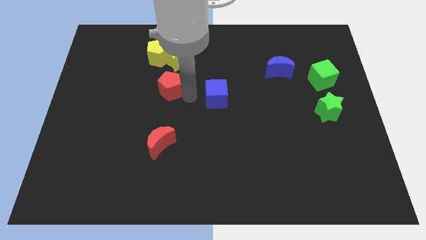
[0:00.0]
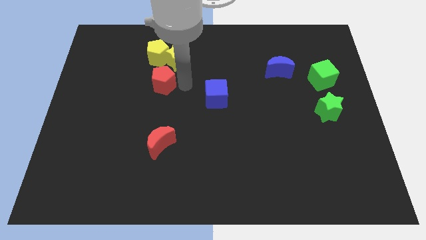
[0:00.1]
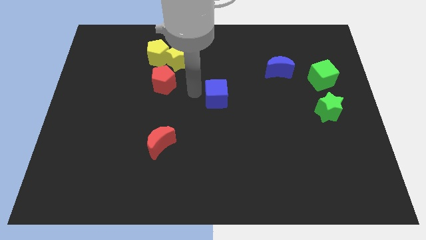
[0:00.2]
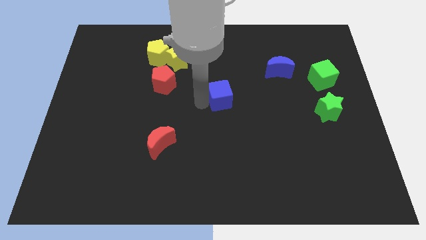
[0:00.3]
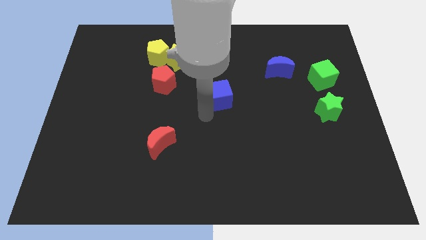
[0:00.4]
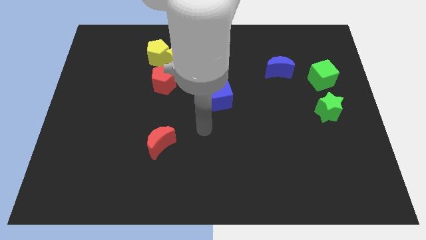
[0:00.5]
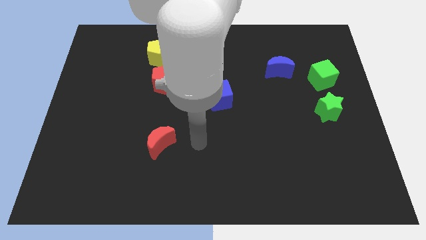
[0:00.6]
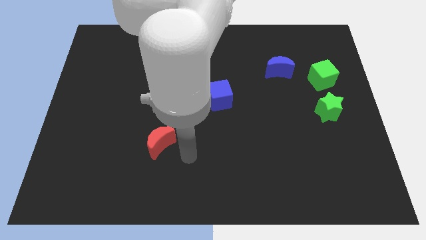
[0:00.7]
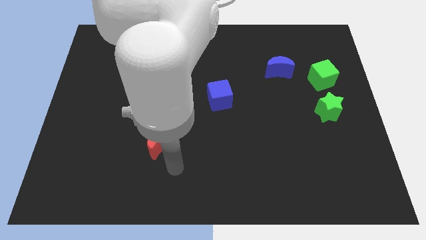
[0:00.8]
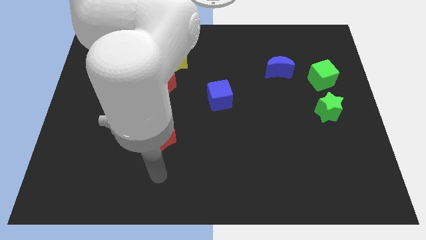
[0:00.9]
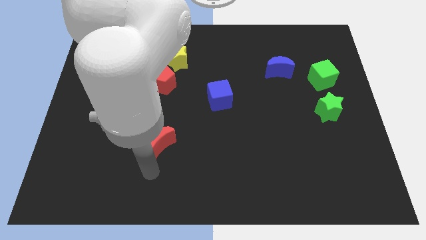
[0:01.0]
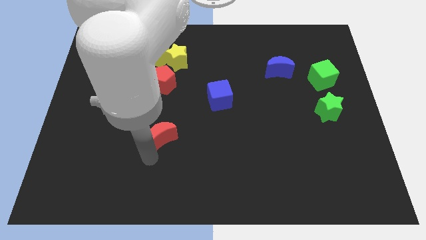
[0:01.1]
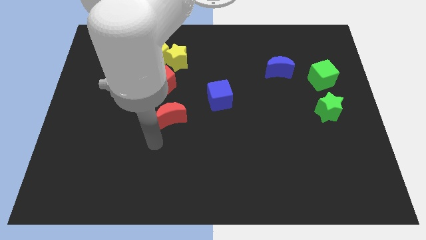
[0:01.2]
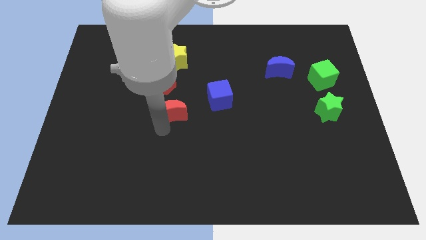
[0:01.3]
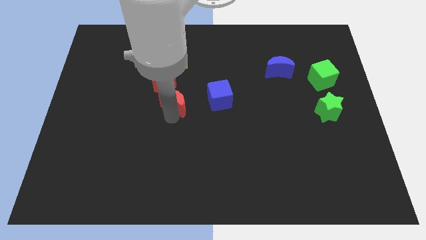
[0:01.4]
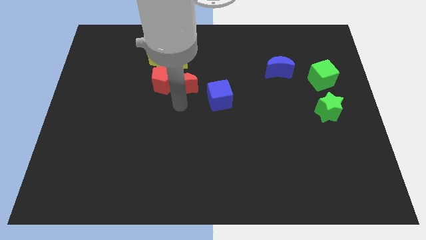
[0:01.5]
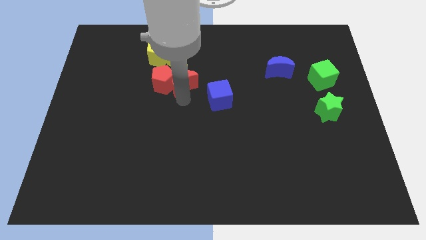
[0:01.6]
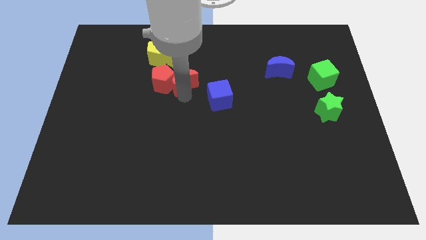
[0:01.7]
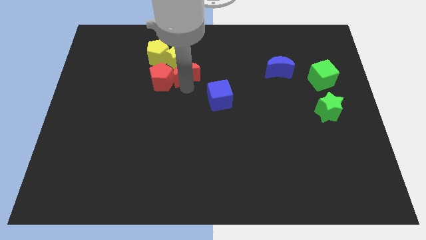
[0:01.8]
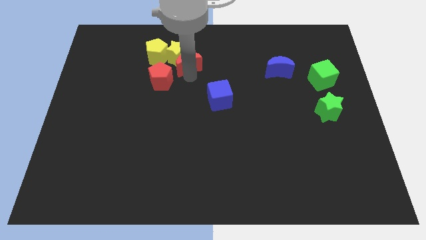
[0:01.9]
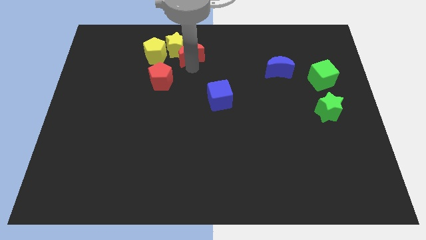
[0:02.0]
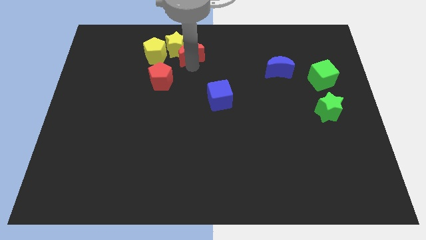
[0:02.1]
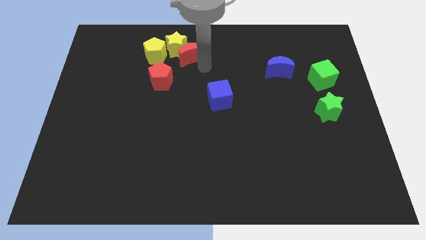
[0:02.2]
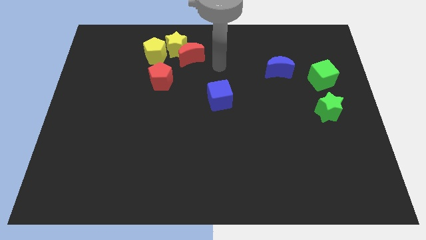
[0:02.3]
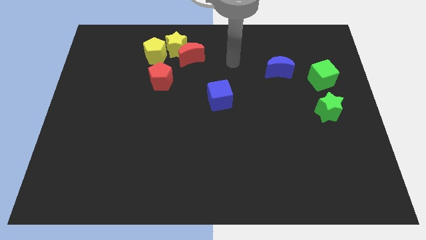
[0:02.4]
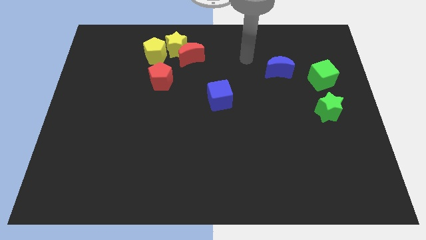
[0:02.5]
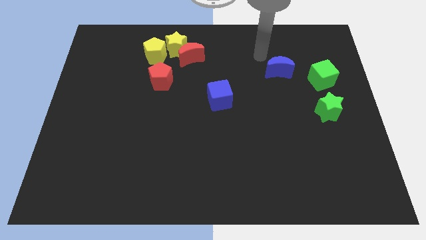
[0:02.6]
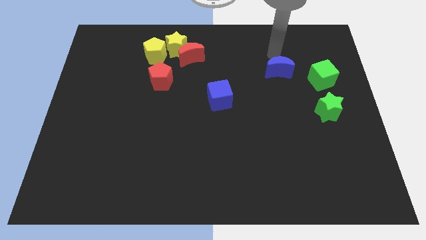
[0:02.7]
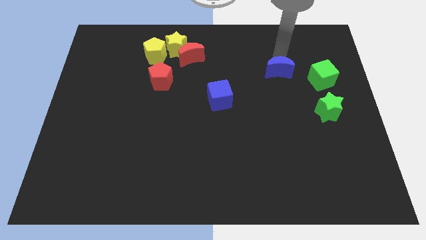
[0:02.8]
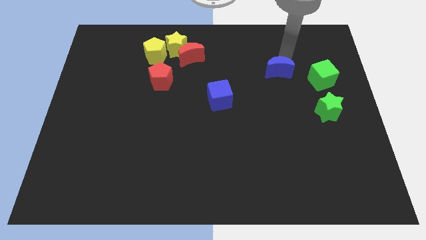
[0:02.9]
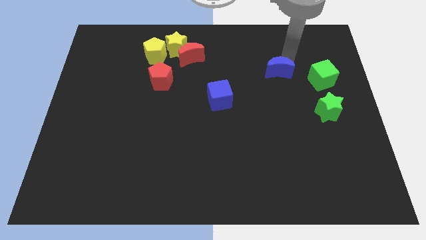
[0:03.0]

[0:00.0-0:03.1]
push the red crescent to the bottom of the yellow star

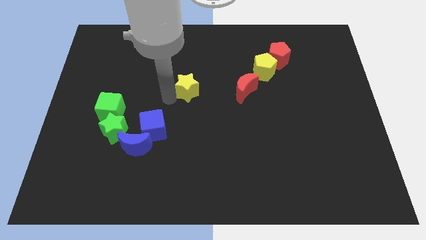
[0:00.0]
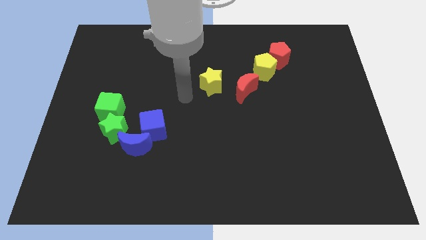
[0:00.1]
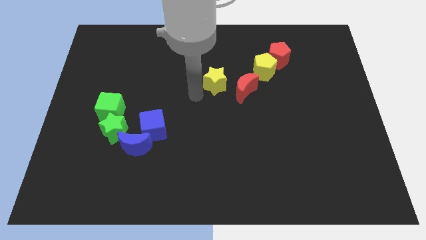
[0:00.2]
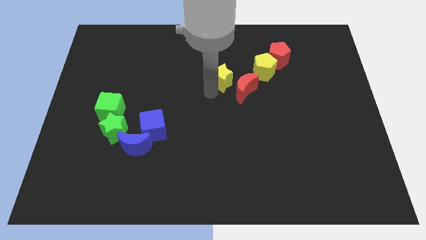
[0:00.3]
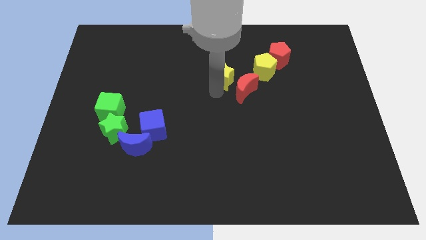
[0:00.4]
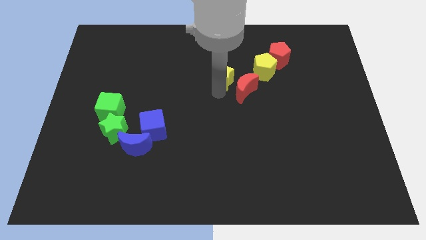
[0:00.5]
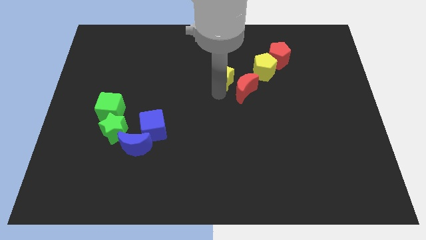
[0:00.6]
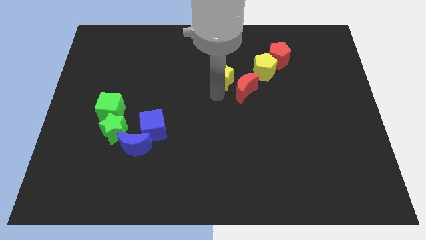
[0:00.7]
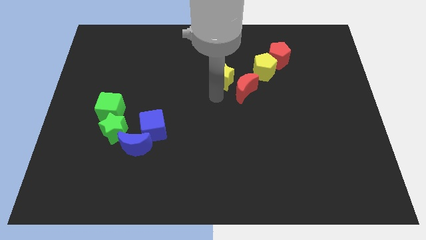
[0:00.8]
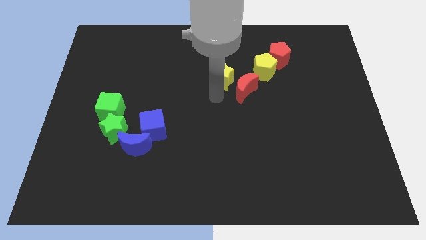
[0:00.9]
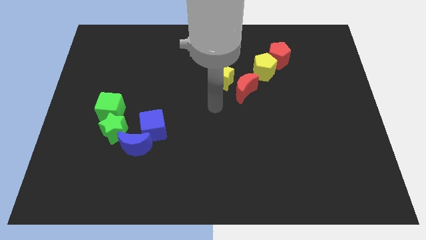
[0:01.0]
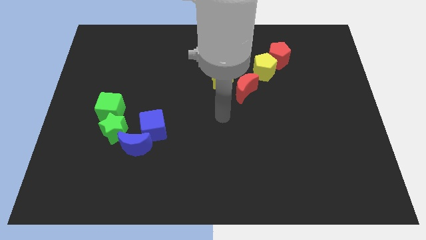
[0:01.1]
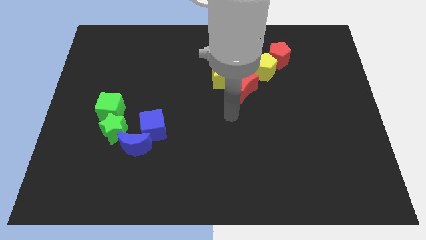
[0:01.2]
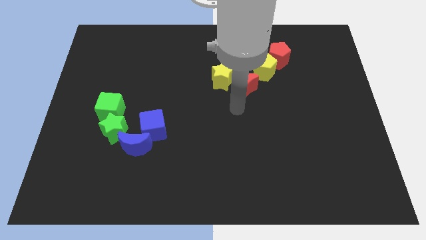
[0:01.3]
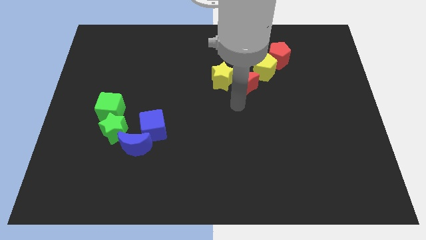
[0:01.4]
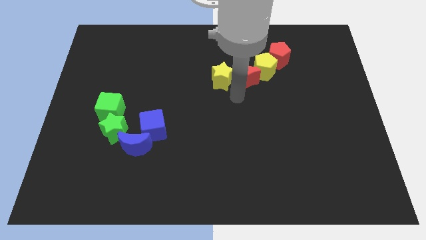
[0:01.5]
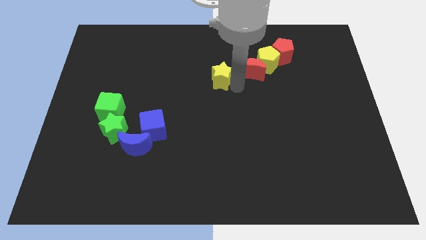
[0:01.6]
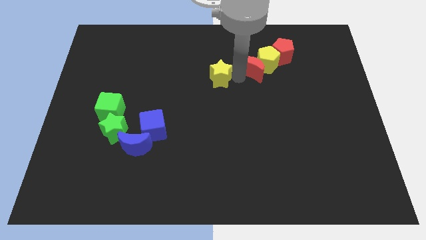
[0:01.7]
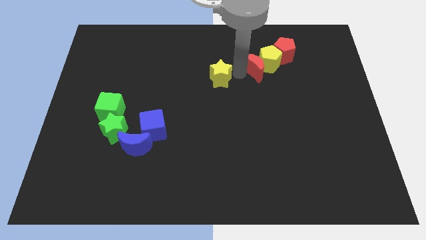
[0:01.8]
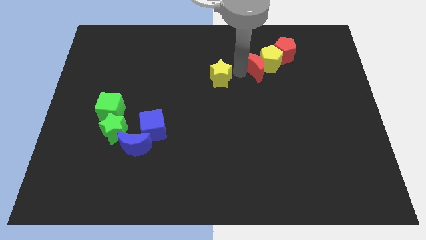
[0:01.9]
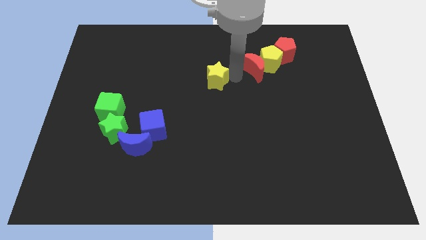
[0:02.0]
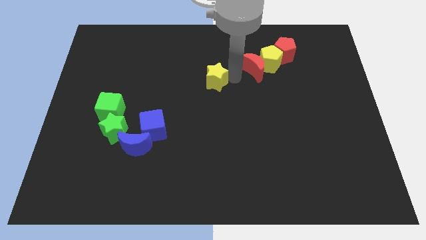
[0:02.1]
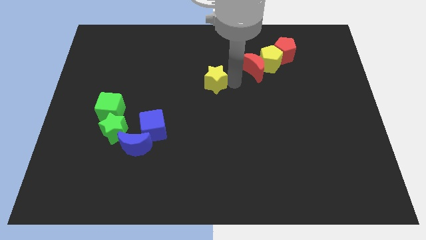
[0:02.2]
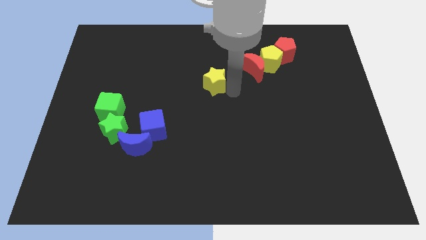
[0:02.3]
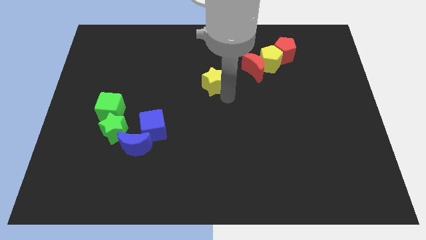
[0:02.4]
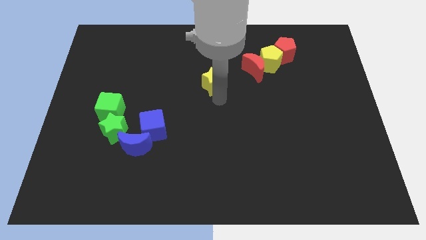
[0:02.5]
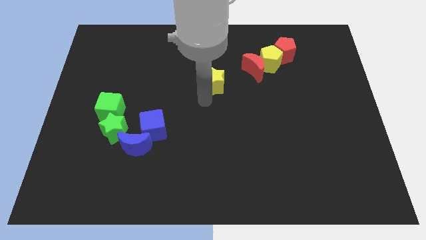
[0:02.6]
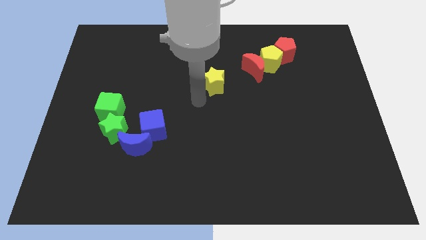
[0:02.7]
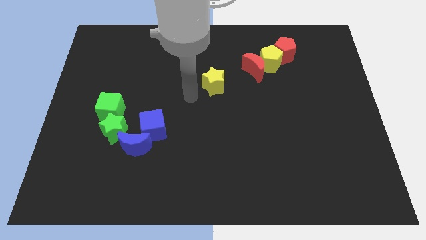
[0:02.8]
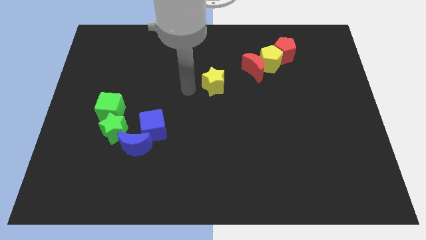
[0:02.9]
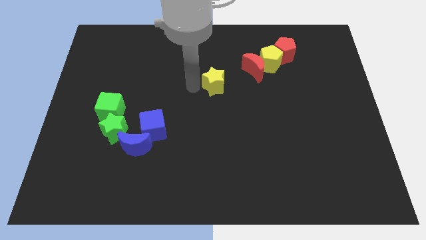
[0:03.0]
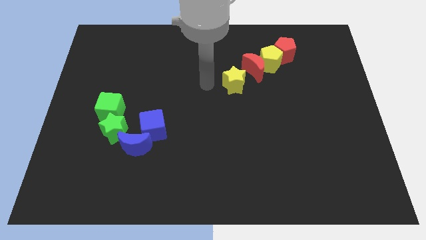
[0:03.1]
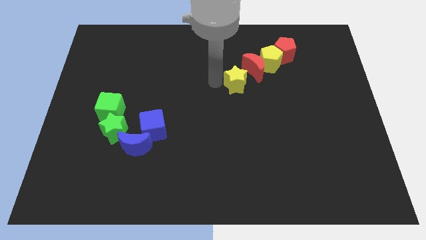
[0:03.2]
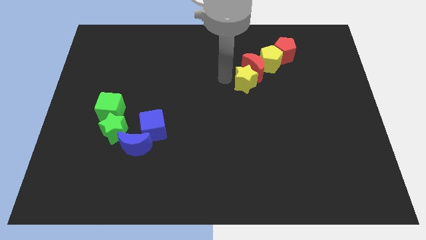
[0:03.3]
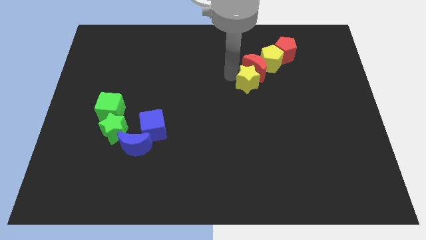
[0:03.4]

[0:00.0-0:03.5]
make a diagonal line out of red and the yellow blocks

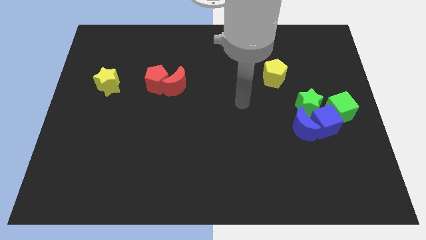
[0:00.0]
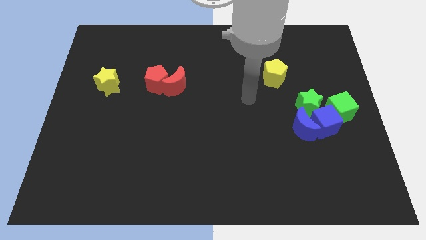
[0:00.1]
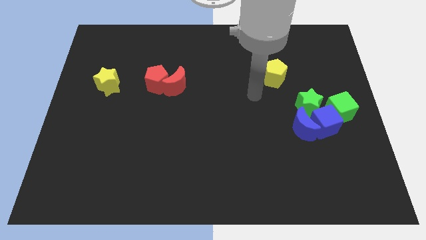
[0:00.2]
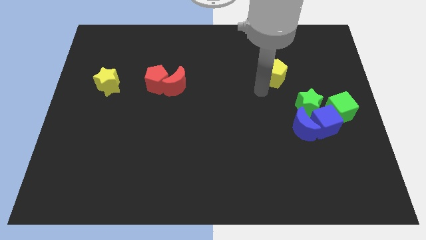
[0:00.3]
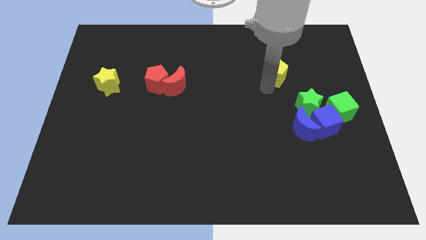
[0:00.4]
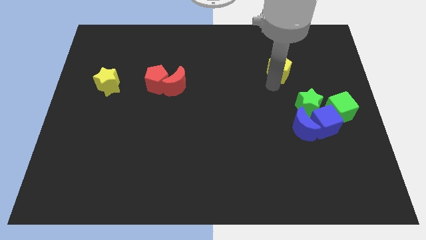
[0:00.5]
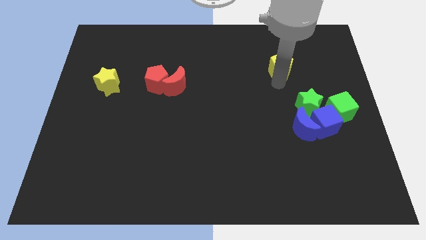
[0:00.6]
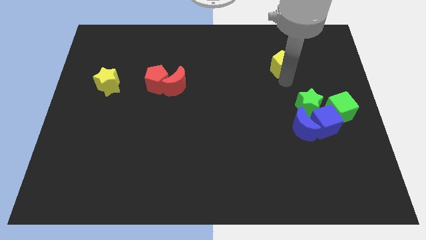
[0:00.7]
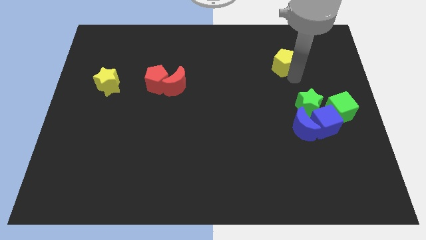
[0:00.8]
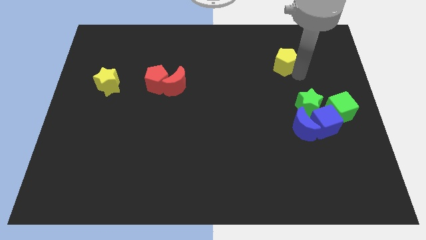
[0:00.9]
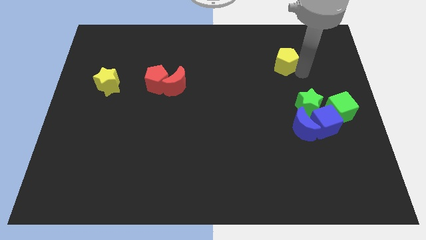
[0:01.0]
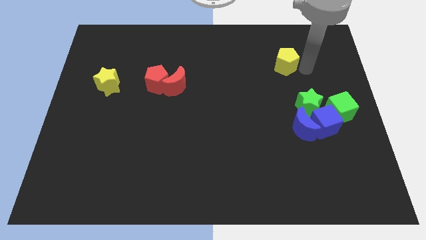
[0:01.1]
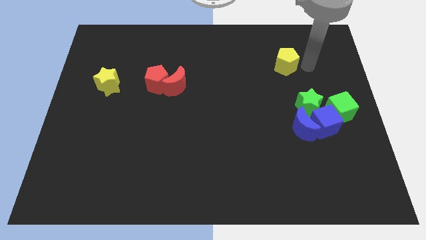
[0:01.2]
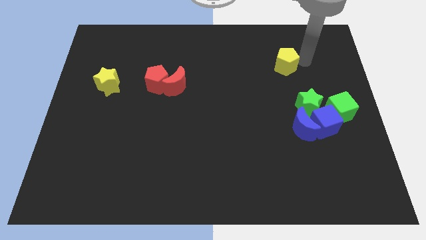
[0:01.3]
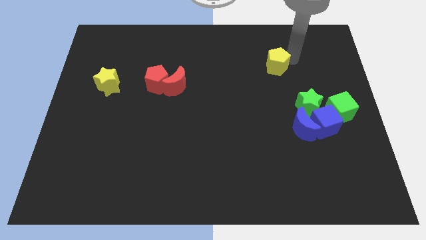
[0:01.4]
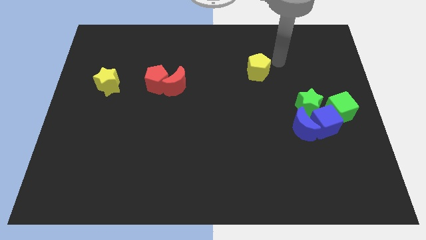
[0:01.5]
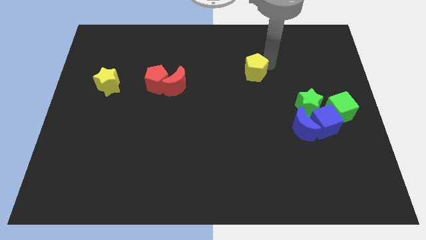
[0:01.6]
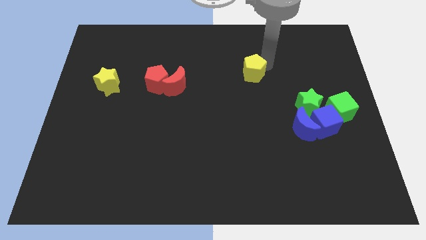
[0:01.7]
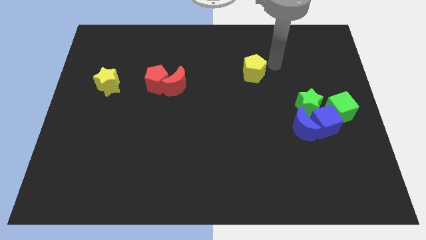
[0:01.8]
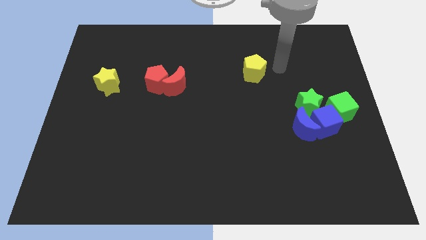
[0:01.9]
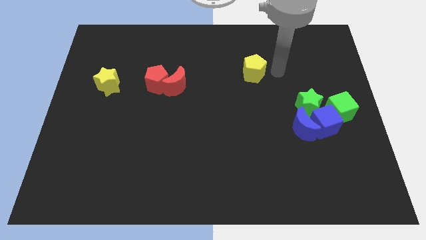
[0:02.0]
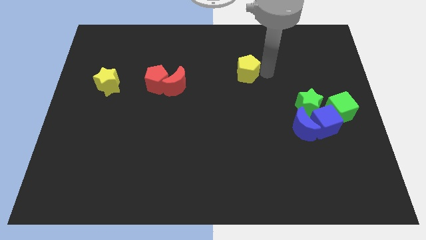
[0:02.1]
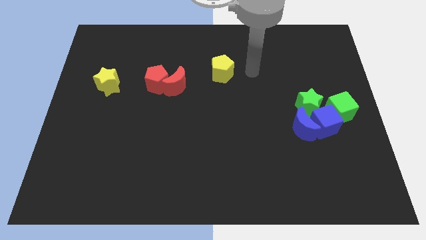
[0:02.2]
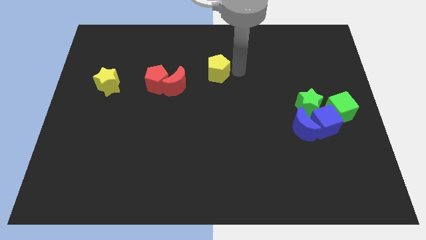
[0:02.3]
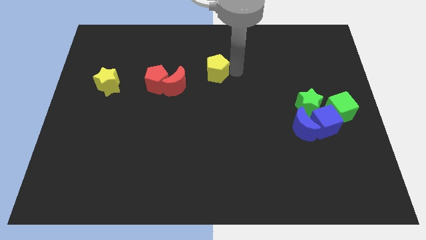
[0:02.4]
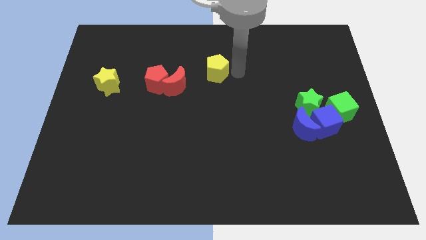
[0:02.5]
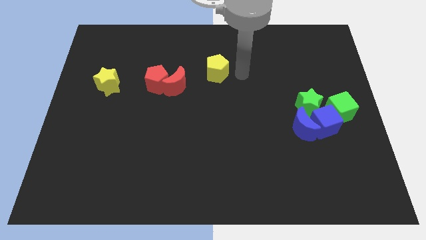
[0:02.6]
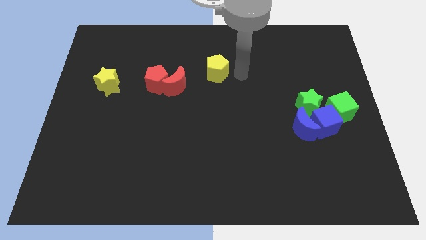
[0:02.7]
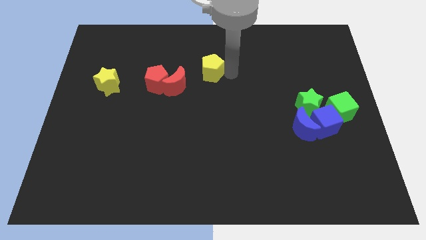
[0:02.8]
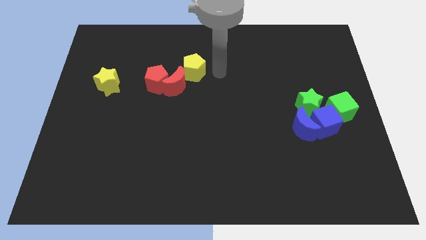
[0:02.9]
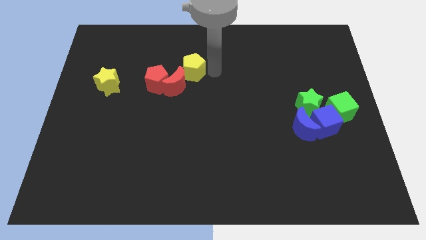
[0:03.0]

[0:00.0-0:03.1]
move the yellow pentagon diagonally right of the red crescent
